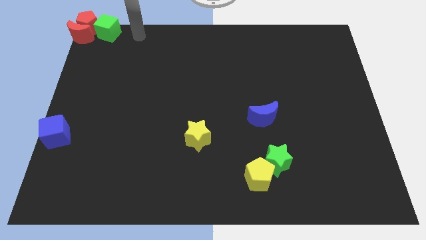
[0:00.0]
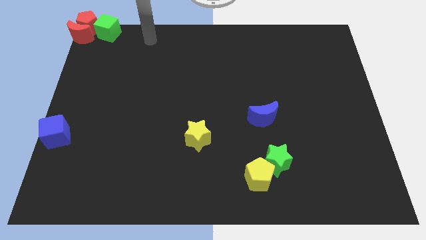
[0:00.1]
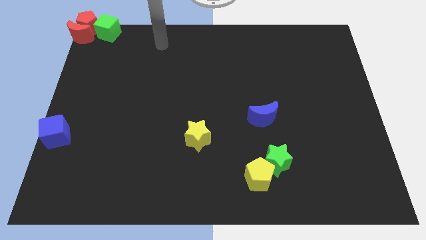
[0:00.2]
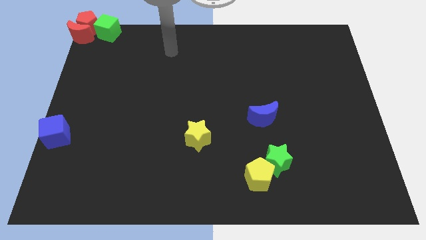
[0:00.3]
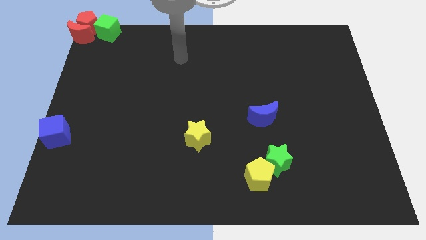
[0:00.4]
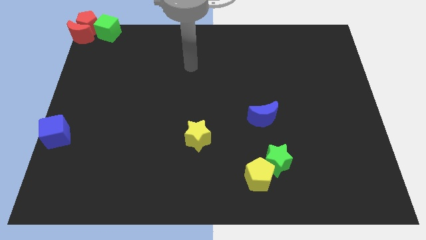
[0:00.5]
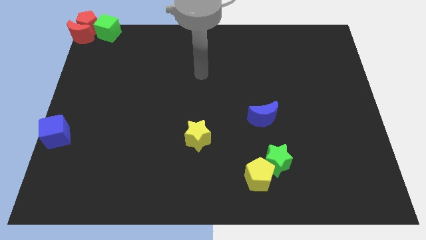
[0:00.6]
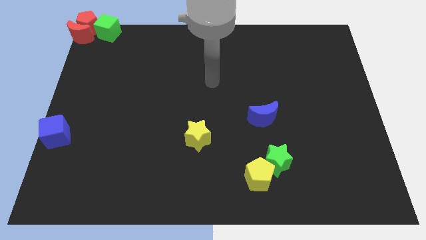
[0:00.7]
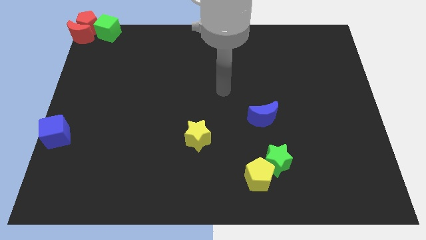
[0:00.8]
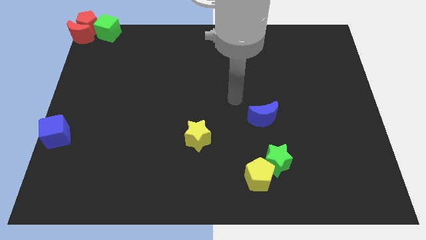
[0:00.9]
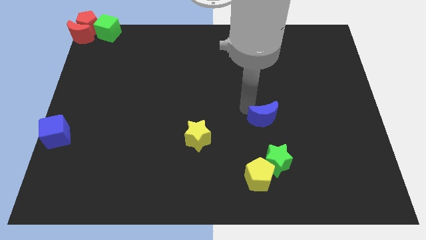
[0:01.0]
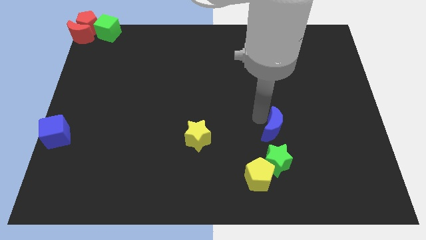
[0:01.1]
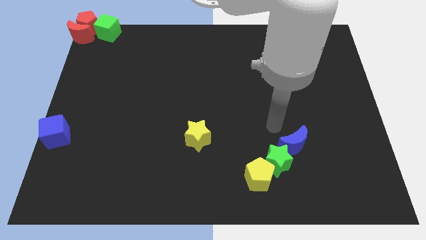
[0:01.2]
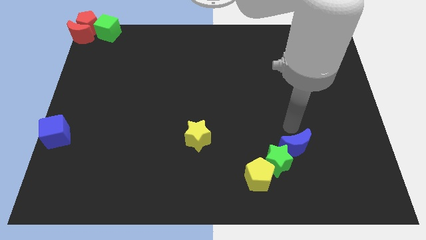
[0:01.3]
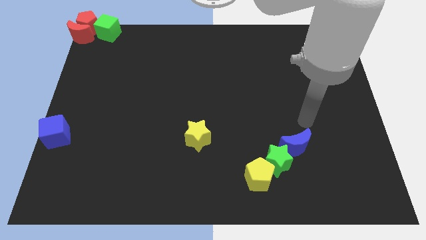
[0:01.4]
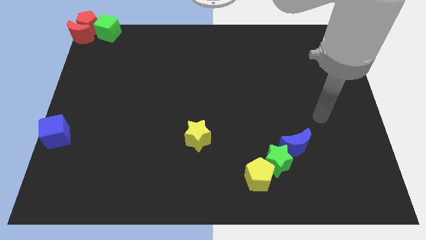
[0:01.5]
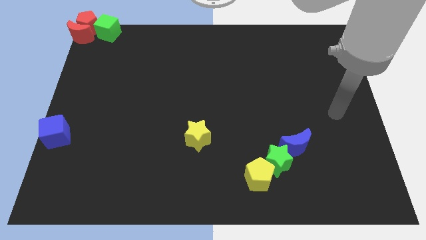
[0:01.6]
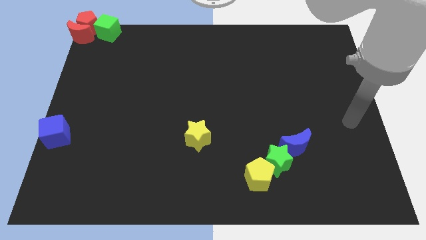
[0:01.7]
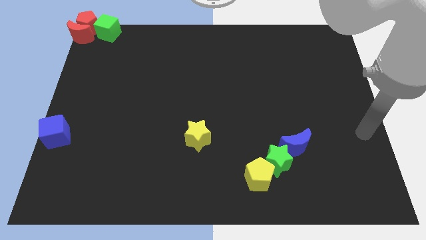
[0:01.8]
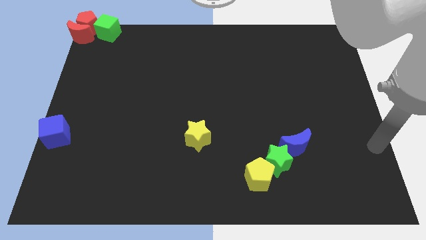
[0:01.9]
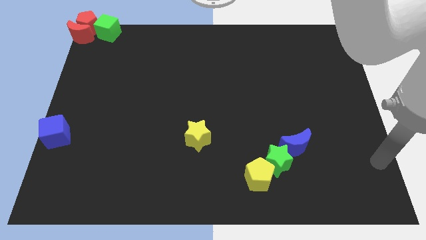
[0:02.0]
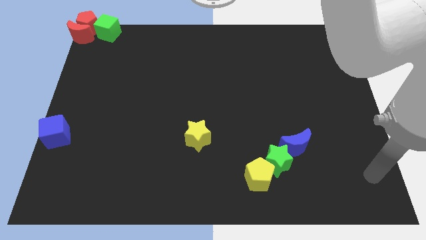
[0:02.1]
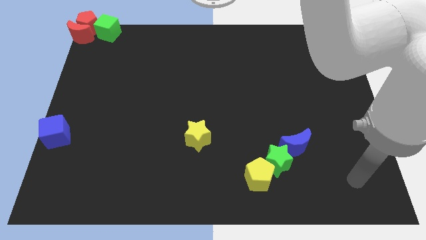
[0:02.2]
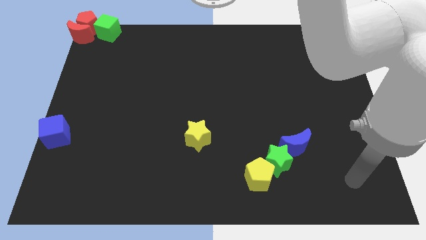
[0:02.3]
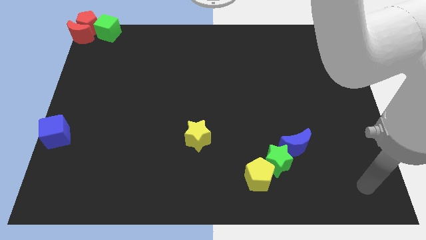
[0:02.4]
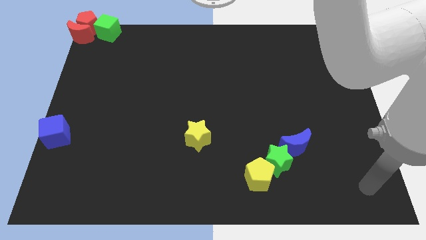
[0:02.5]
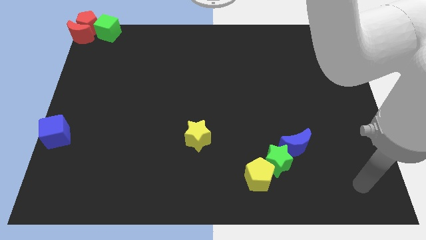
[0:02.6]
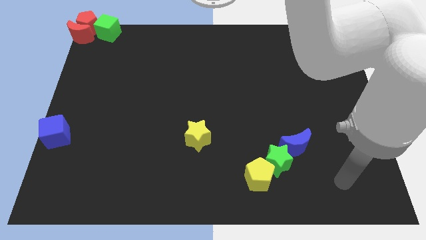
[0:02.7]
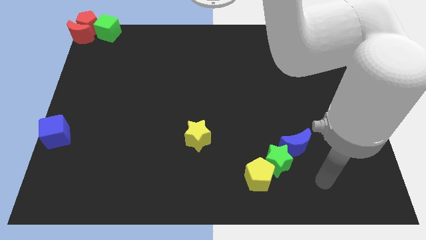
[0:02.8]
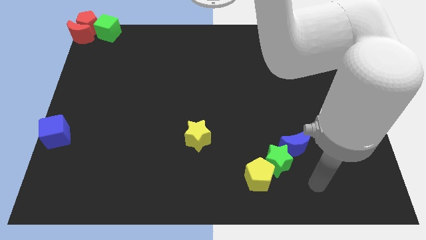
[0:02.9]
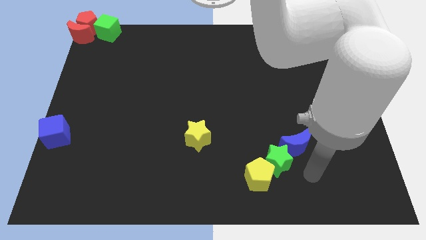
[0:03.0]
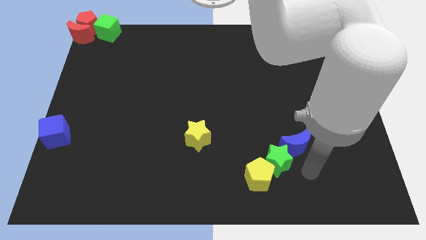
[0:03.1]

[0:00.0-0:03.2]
slightly move the blue crescent to the right side of the green star

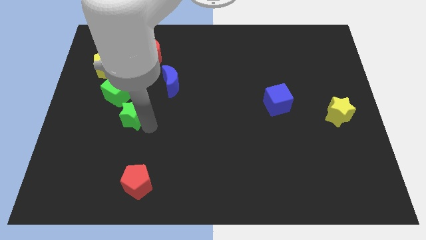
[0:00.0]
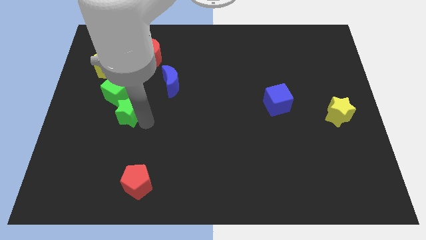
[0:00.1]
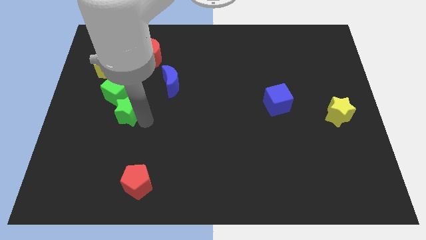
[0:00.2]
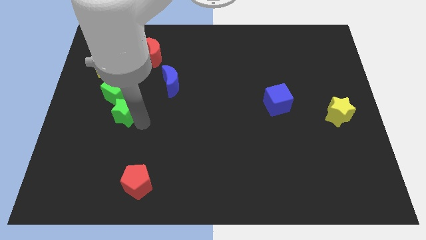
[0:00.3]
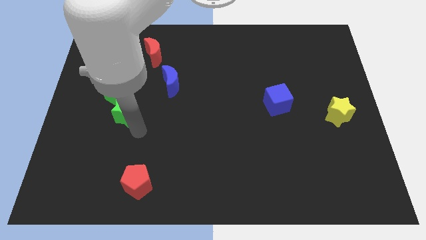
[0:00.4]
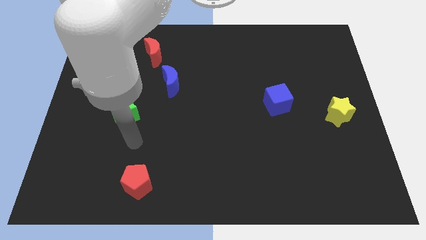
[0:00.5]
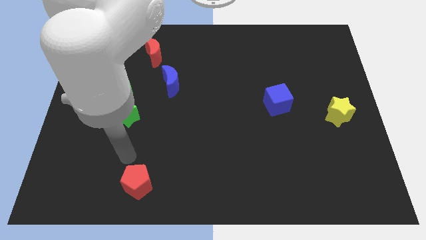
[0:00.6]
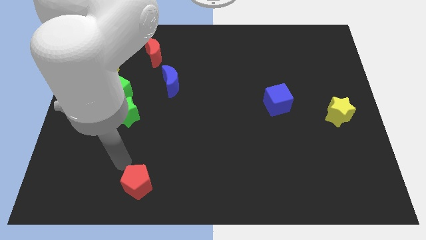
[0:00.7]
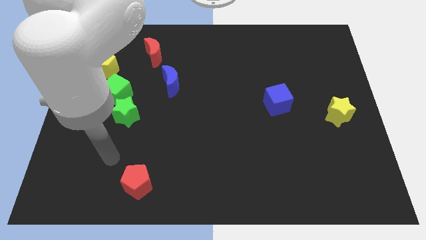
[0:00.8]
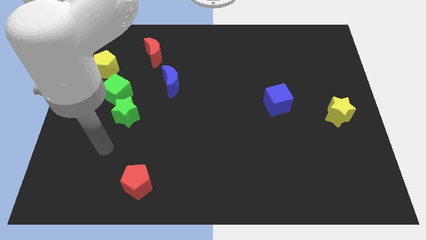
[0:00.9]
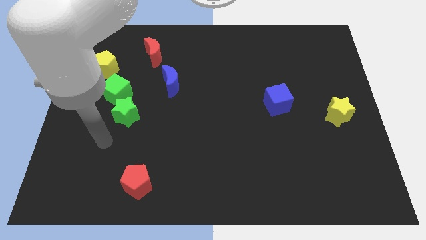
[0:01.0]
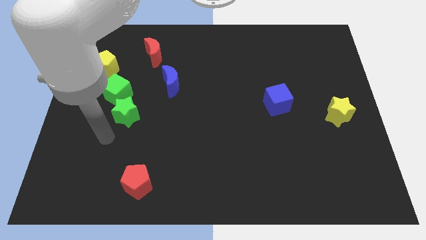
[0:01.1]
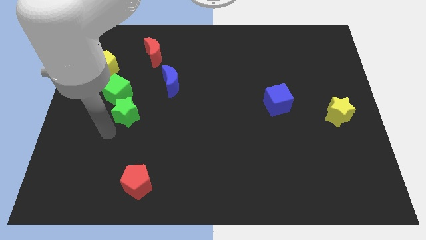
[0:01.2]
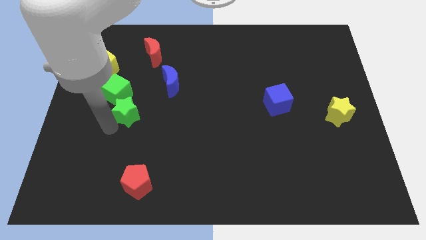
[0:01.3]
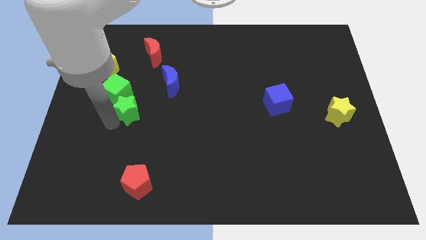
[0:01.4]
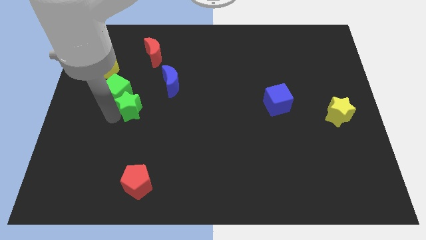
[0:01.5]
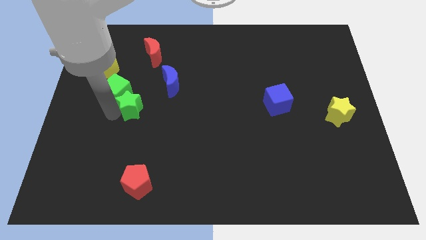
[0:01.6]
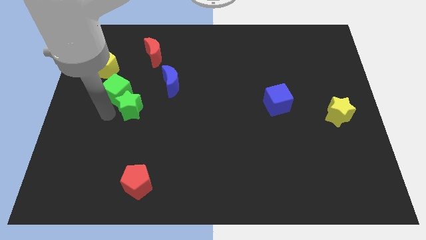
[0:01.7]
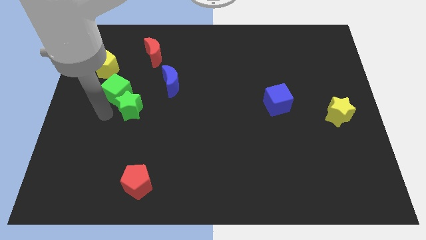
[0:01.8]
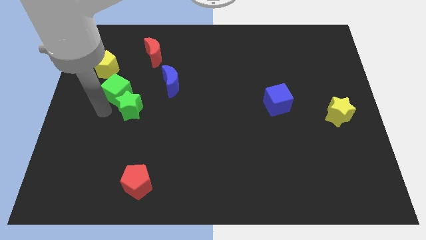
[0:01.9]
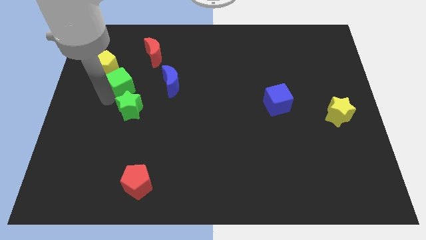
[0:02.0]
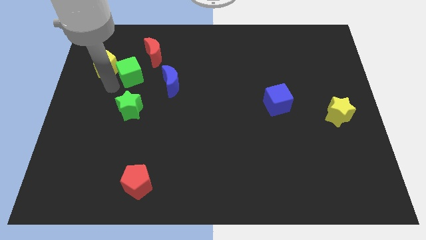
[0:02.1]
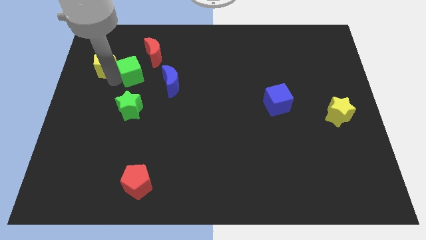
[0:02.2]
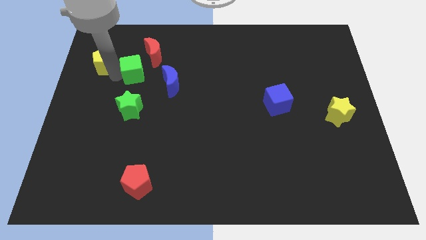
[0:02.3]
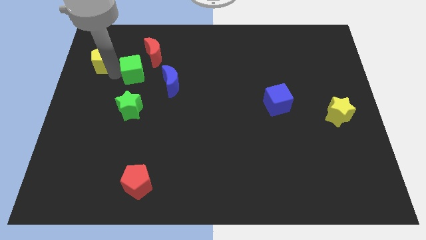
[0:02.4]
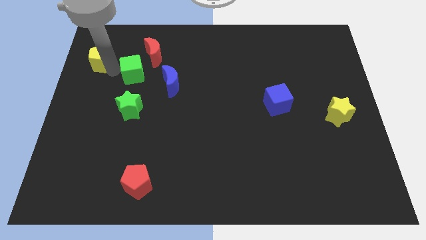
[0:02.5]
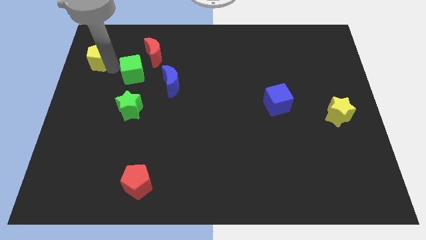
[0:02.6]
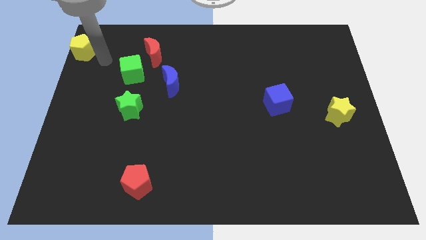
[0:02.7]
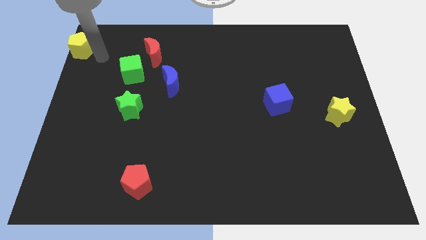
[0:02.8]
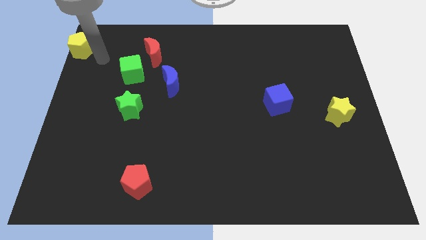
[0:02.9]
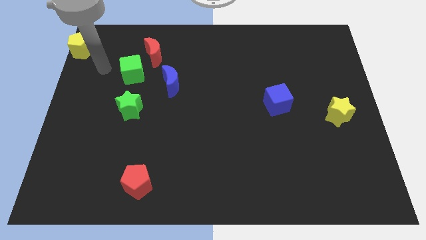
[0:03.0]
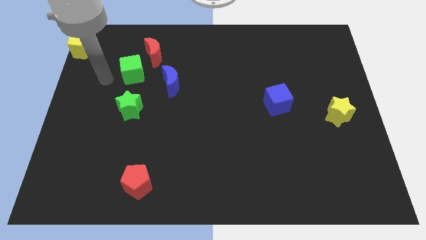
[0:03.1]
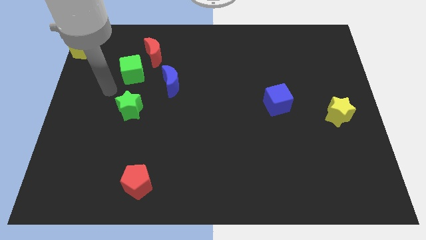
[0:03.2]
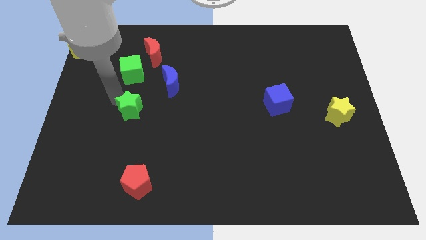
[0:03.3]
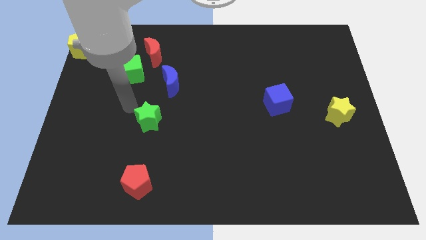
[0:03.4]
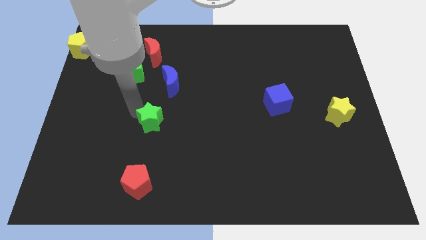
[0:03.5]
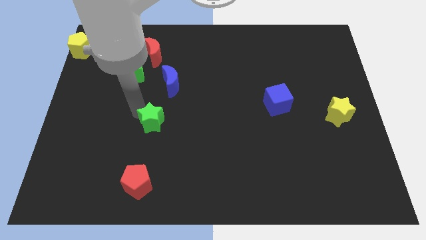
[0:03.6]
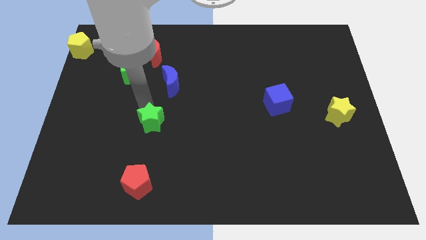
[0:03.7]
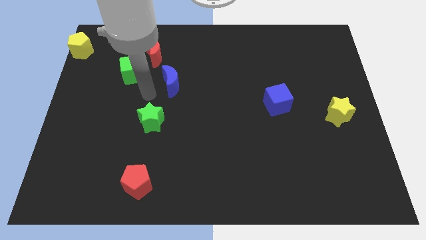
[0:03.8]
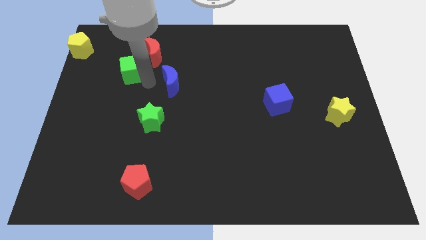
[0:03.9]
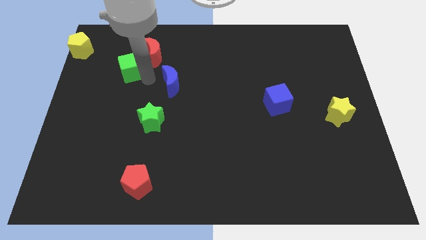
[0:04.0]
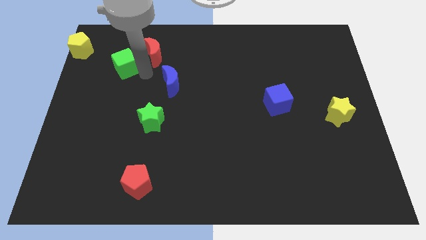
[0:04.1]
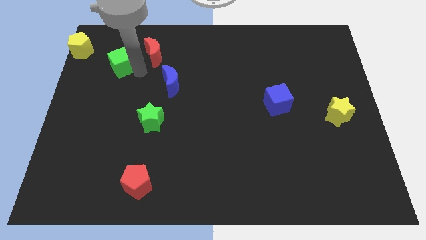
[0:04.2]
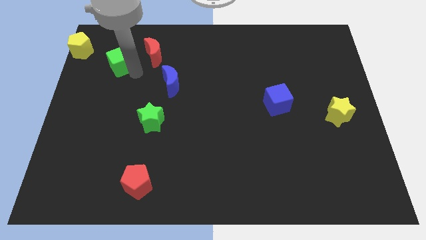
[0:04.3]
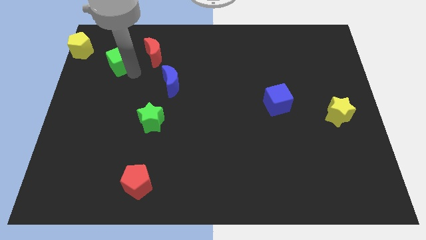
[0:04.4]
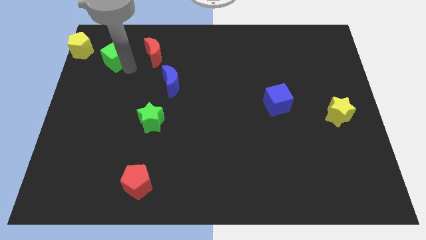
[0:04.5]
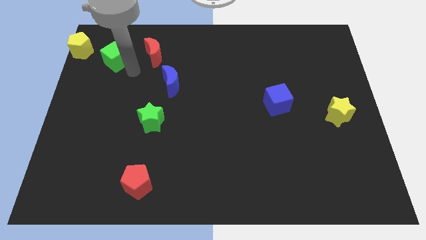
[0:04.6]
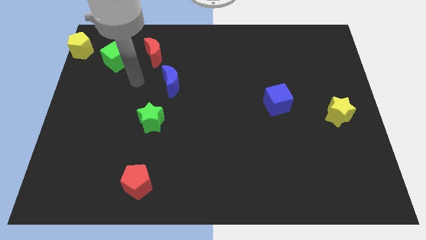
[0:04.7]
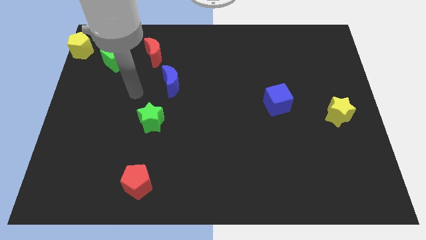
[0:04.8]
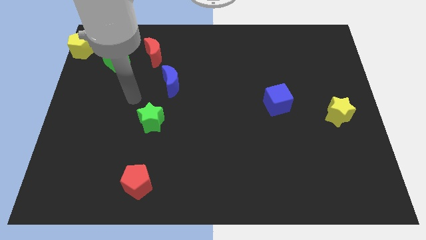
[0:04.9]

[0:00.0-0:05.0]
separate the green star from the green cube

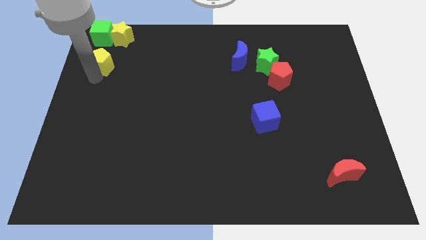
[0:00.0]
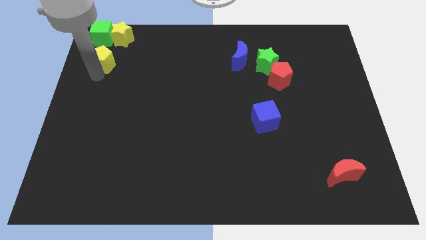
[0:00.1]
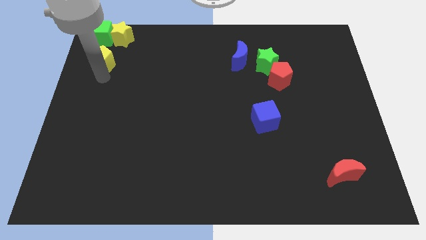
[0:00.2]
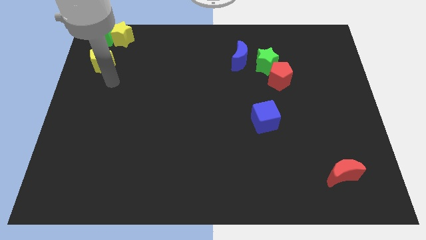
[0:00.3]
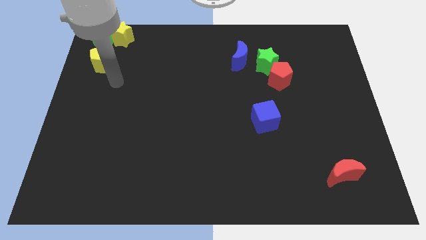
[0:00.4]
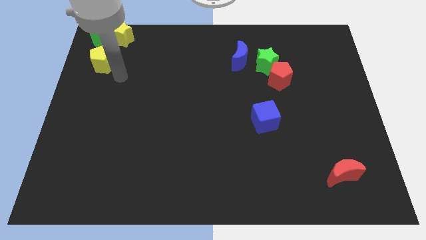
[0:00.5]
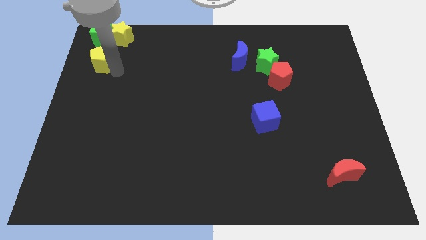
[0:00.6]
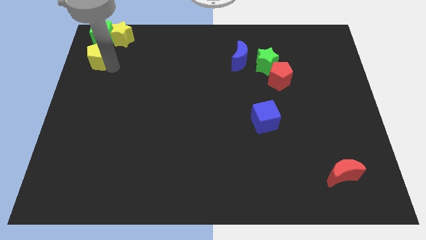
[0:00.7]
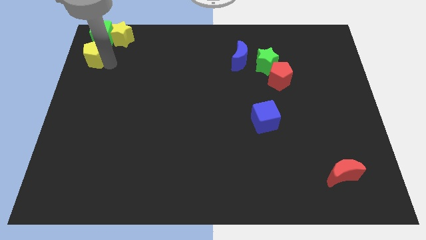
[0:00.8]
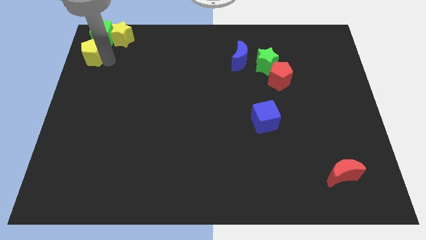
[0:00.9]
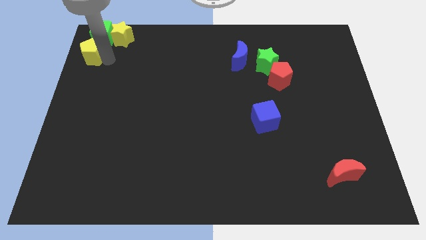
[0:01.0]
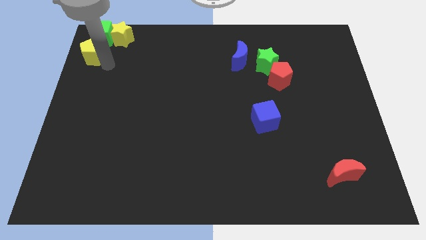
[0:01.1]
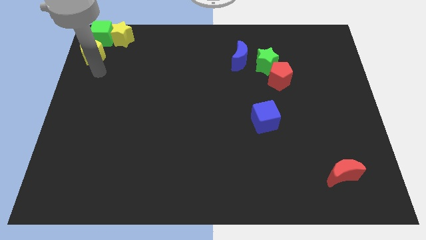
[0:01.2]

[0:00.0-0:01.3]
move the yellow pentagon at the bottom of the green cube
